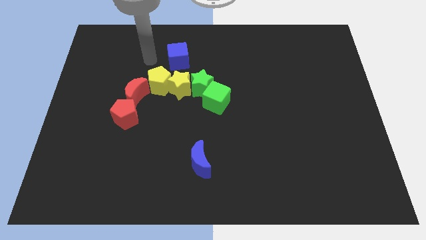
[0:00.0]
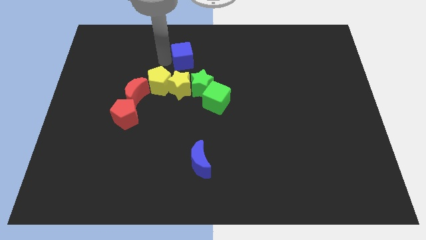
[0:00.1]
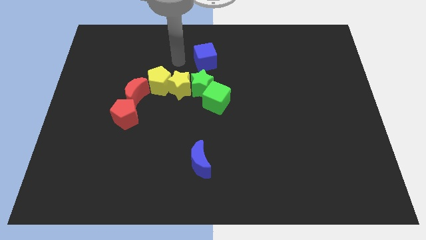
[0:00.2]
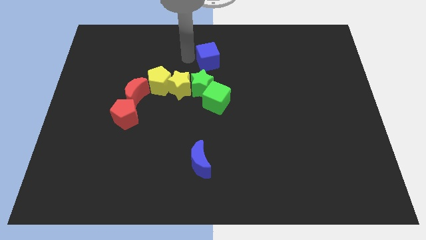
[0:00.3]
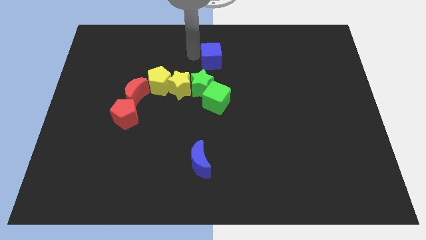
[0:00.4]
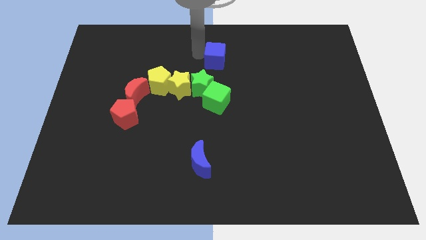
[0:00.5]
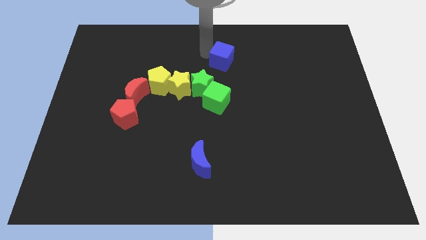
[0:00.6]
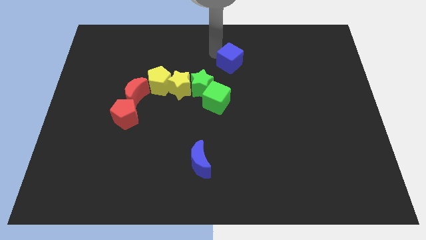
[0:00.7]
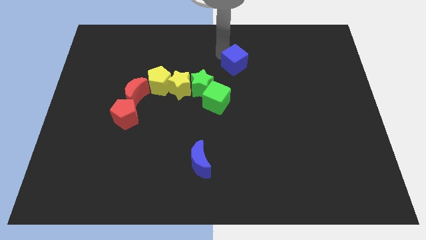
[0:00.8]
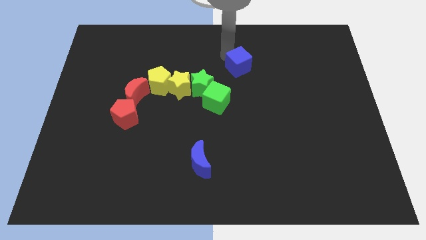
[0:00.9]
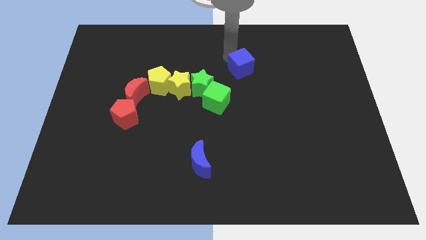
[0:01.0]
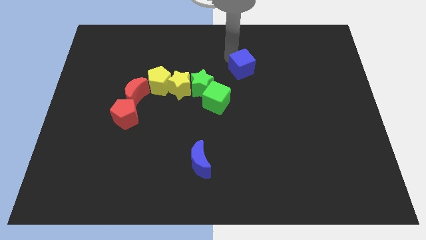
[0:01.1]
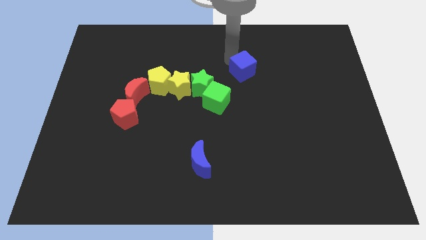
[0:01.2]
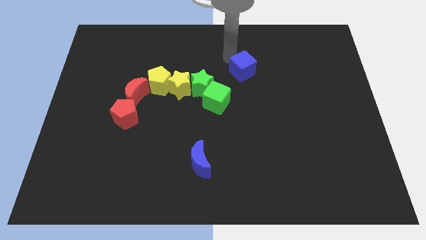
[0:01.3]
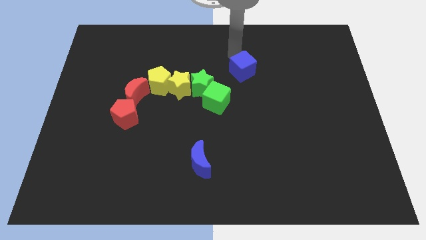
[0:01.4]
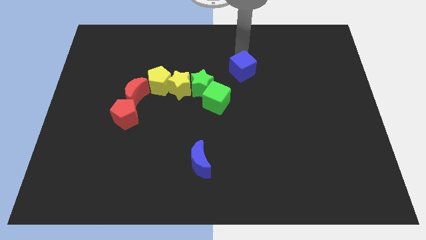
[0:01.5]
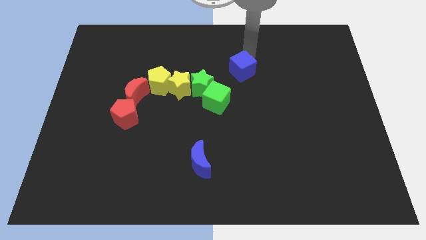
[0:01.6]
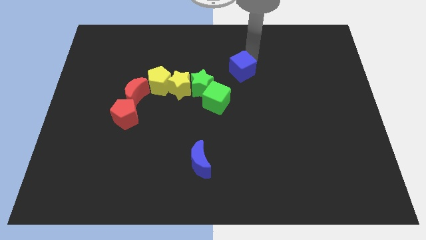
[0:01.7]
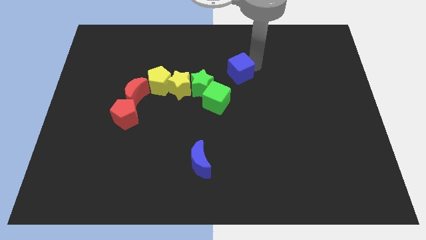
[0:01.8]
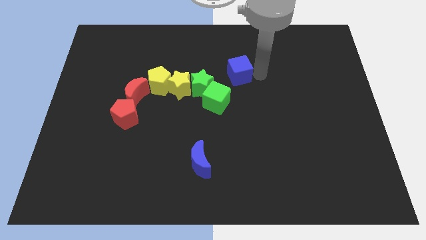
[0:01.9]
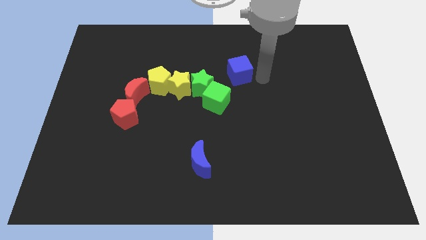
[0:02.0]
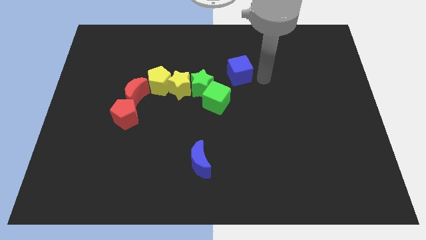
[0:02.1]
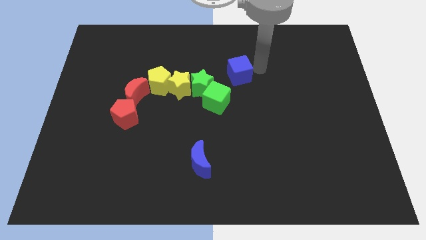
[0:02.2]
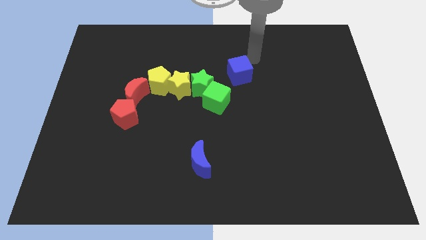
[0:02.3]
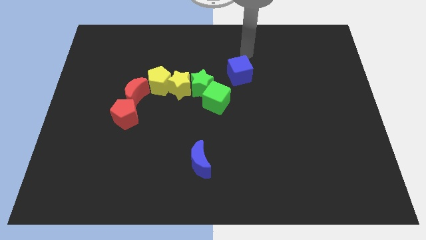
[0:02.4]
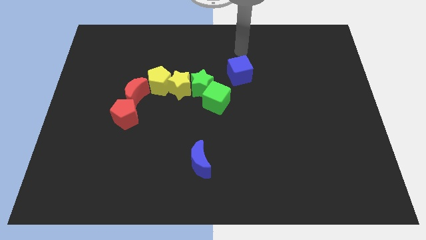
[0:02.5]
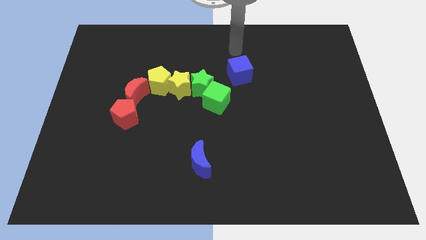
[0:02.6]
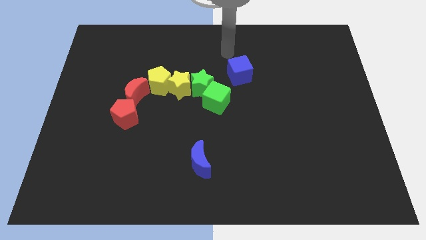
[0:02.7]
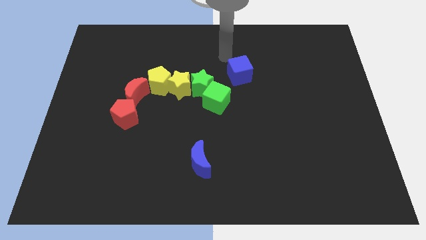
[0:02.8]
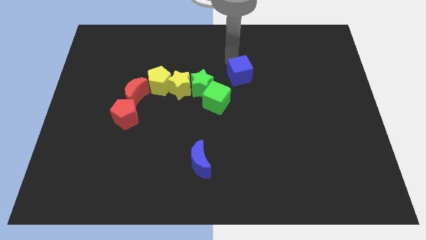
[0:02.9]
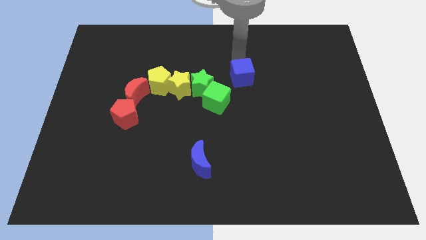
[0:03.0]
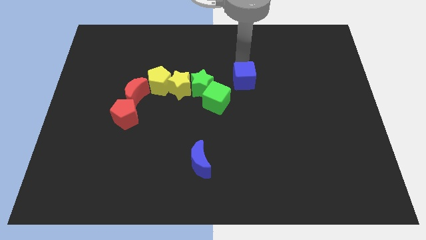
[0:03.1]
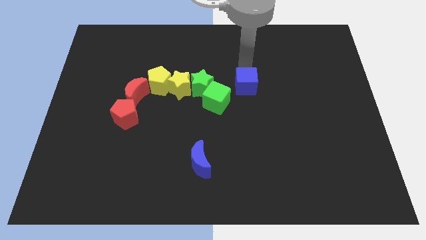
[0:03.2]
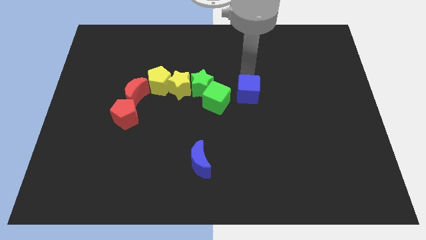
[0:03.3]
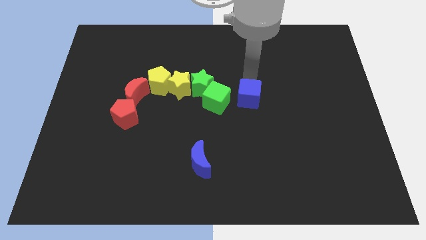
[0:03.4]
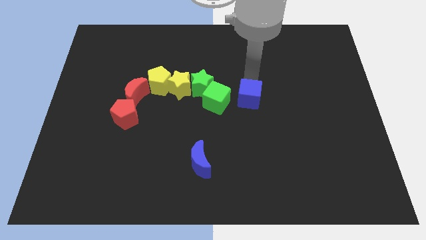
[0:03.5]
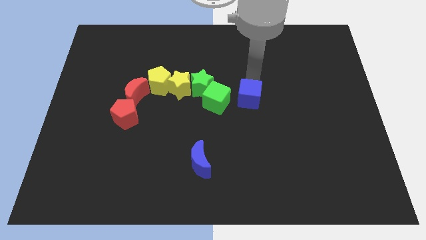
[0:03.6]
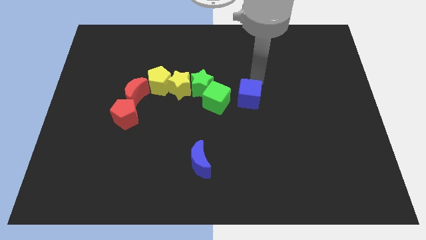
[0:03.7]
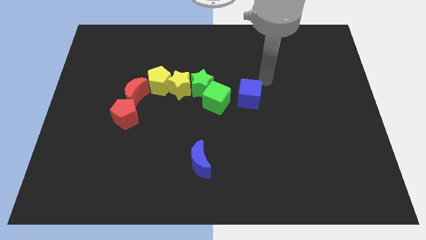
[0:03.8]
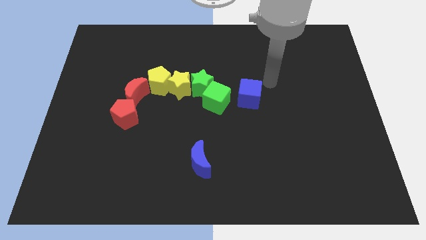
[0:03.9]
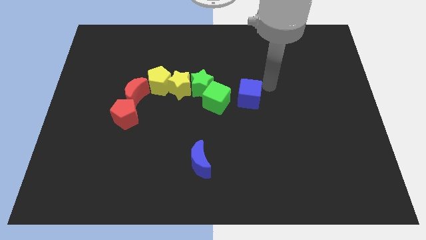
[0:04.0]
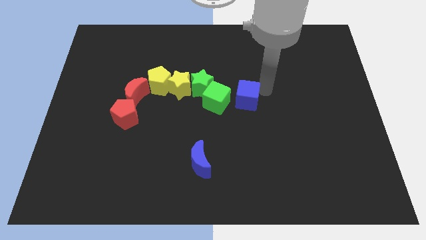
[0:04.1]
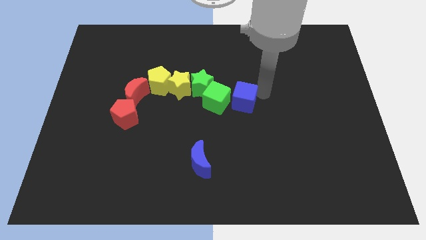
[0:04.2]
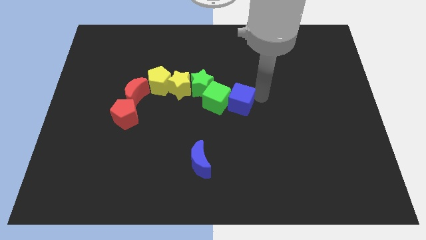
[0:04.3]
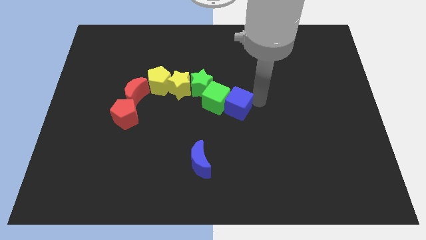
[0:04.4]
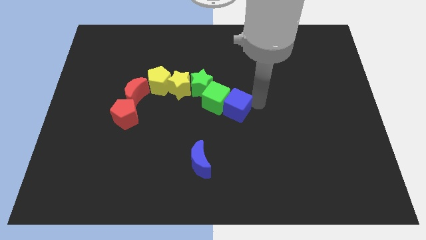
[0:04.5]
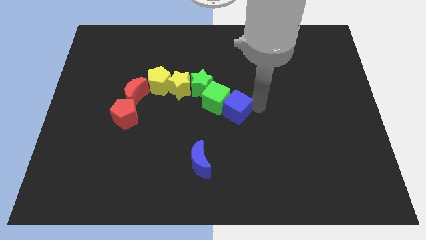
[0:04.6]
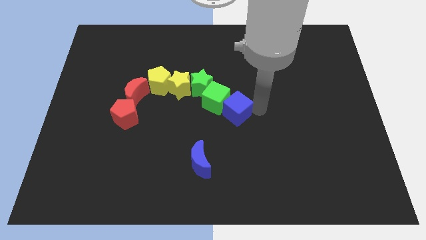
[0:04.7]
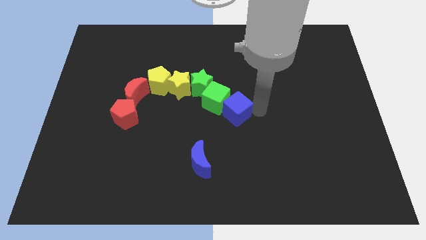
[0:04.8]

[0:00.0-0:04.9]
place the blue cube right to the green cube

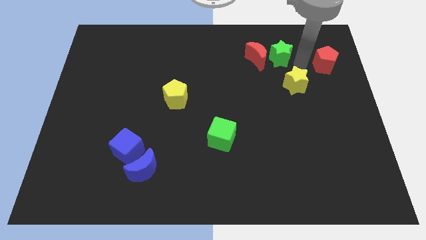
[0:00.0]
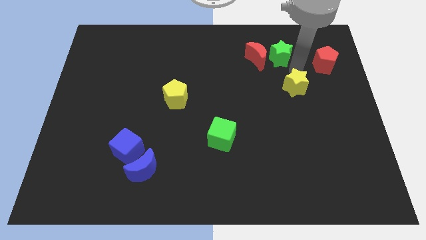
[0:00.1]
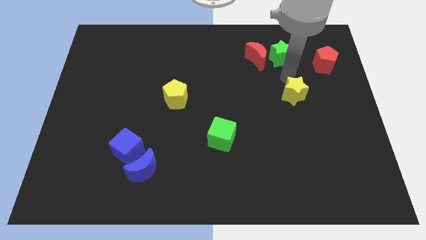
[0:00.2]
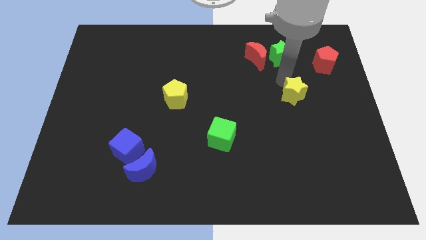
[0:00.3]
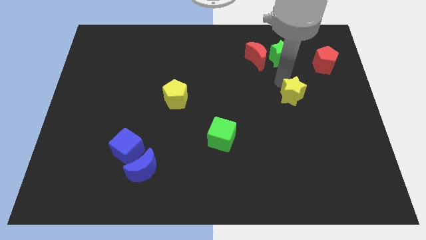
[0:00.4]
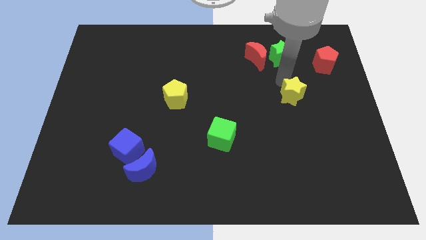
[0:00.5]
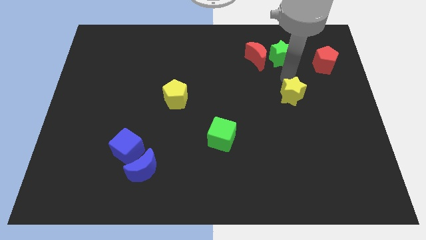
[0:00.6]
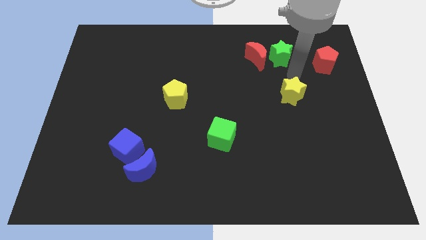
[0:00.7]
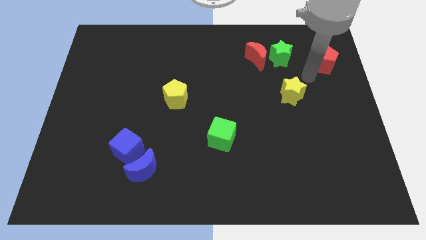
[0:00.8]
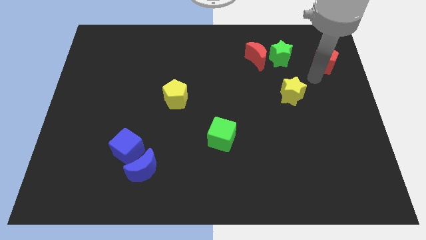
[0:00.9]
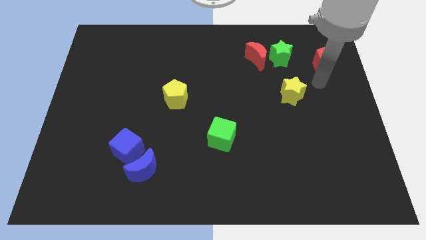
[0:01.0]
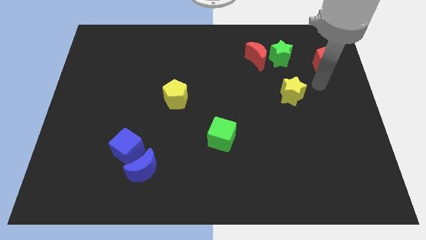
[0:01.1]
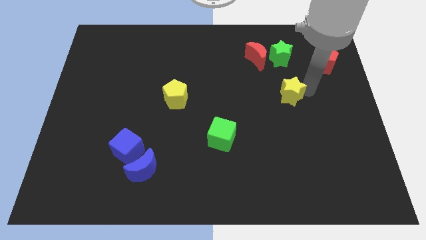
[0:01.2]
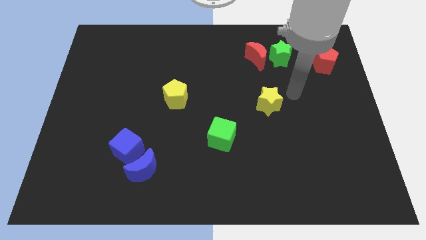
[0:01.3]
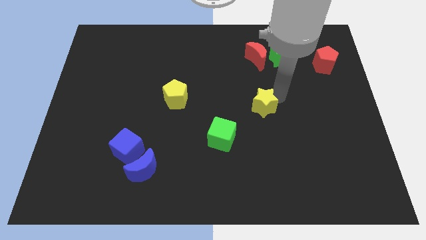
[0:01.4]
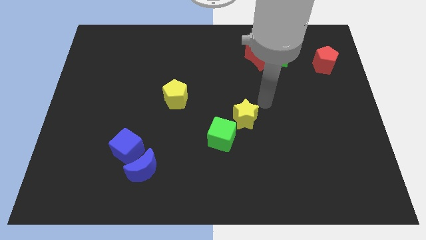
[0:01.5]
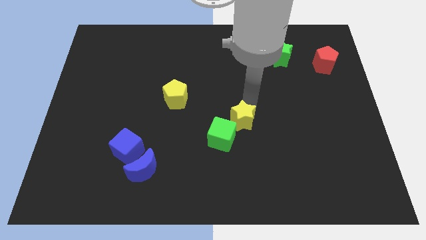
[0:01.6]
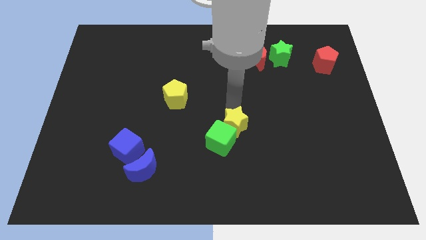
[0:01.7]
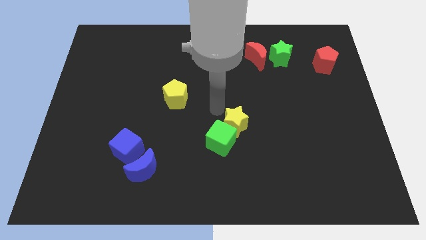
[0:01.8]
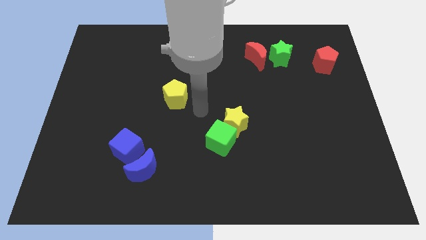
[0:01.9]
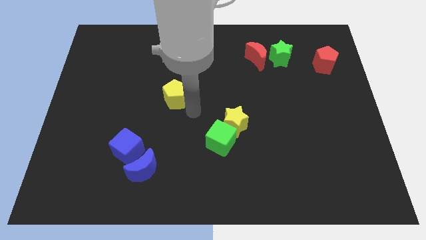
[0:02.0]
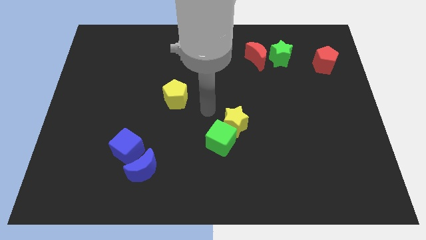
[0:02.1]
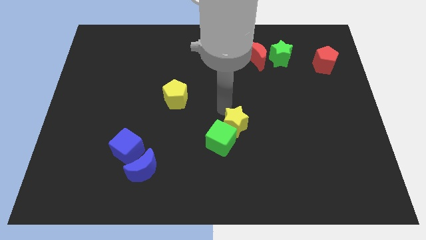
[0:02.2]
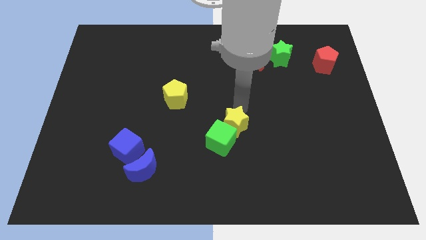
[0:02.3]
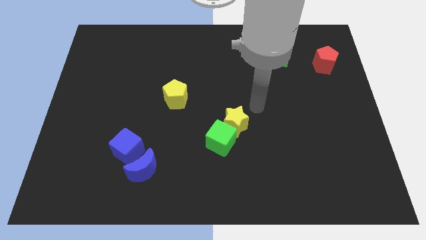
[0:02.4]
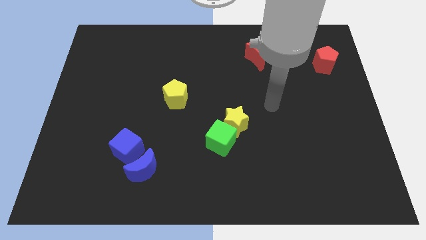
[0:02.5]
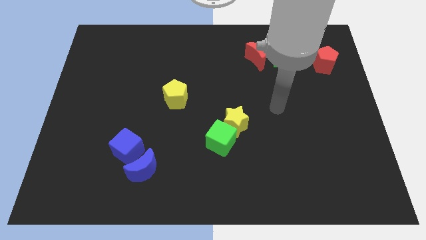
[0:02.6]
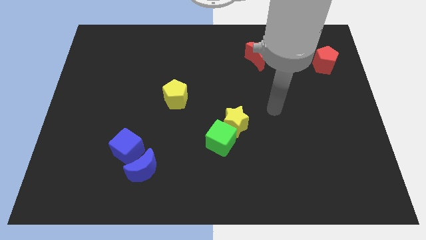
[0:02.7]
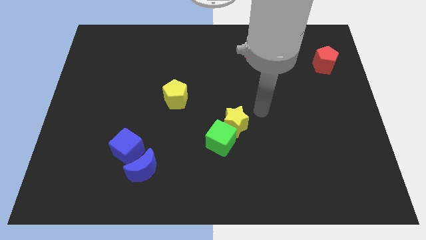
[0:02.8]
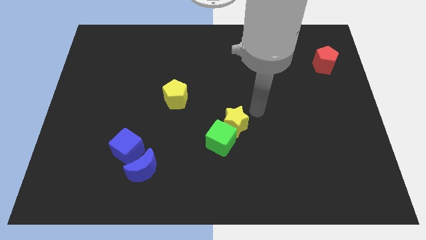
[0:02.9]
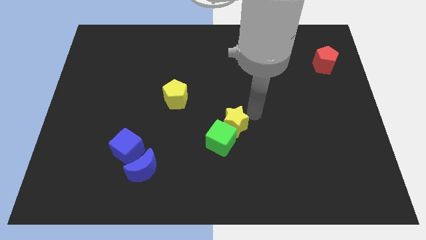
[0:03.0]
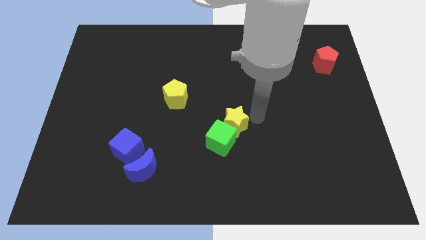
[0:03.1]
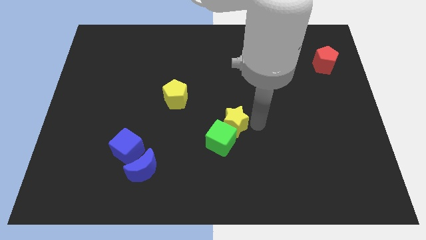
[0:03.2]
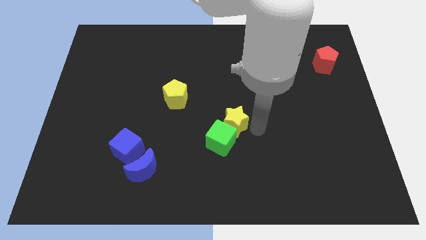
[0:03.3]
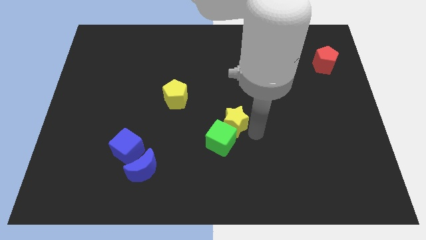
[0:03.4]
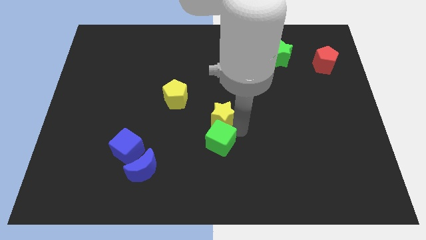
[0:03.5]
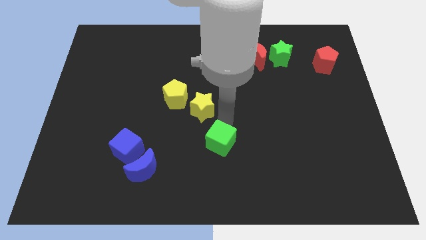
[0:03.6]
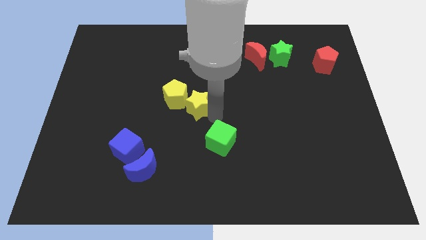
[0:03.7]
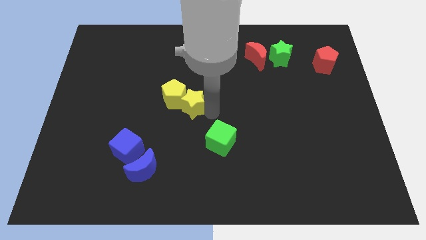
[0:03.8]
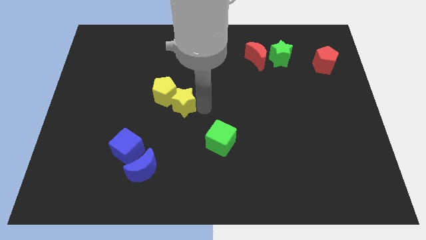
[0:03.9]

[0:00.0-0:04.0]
place the yellow star to the right of the yellow pentagon
